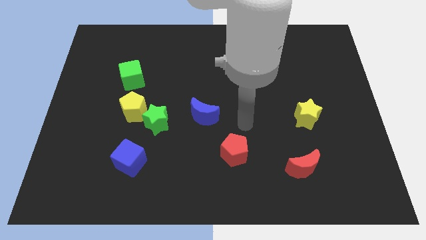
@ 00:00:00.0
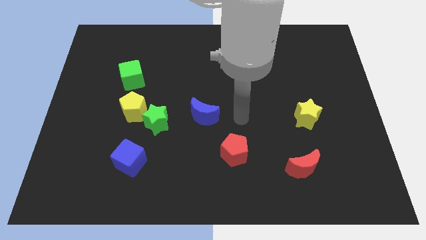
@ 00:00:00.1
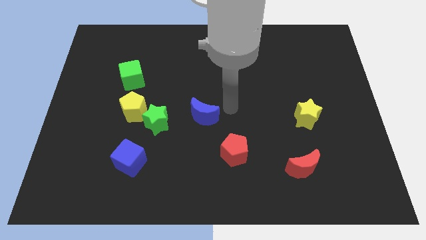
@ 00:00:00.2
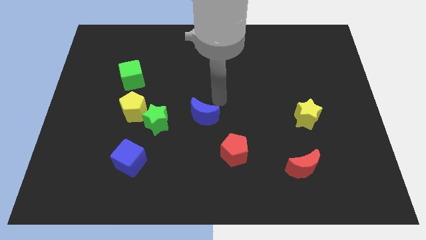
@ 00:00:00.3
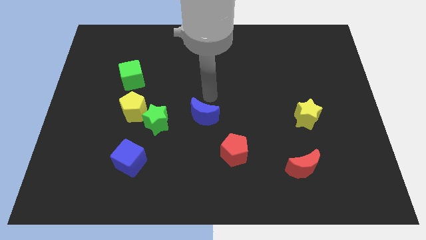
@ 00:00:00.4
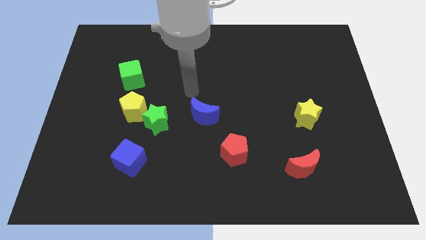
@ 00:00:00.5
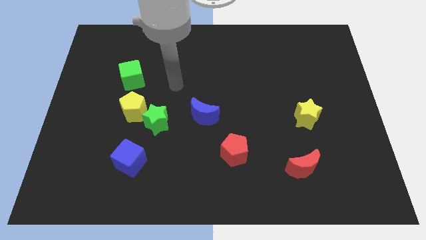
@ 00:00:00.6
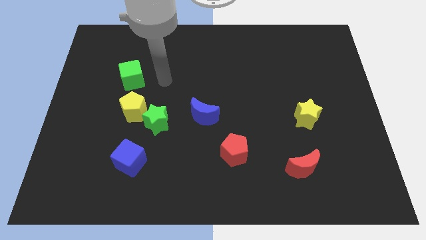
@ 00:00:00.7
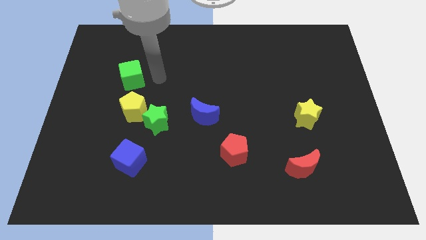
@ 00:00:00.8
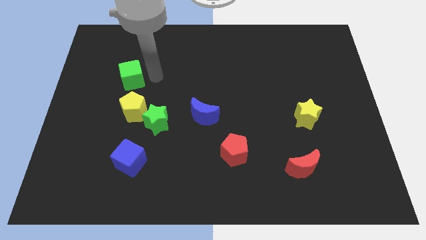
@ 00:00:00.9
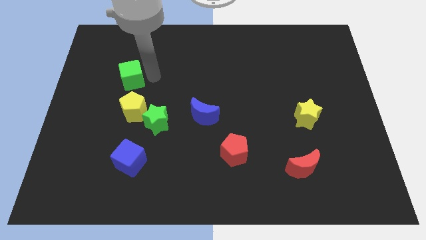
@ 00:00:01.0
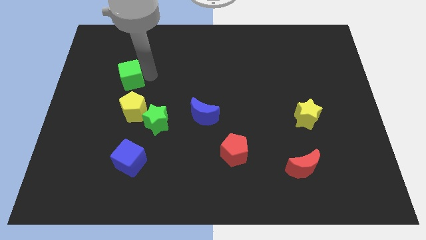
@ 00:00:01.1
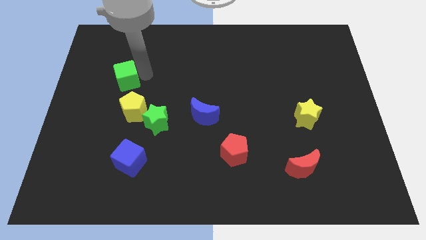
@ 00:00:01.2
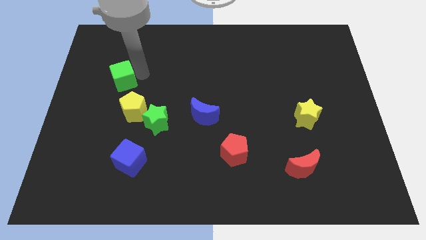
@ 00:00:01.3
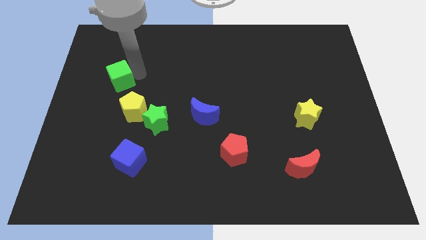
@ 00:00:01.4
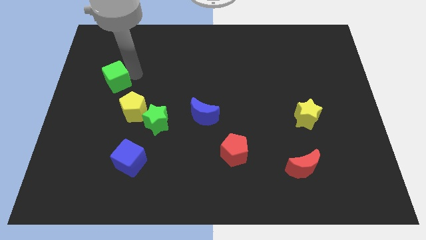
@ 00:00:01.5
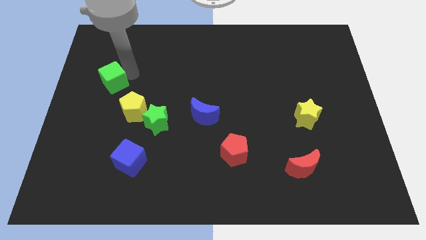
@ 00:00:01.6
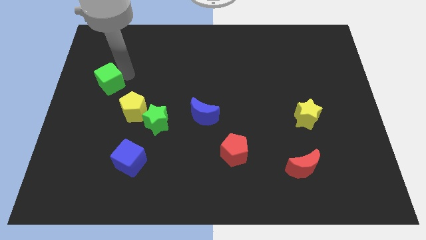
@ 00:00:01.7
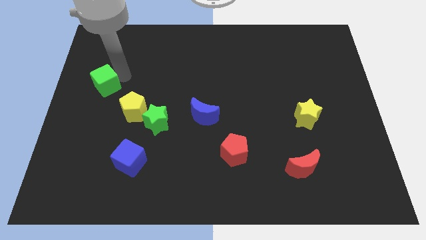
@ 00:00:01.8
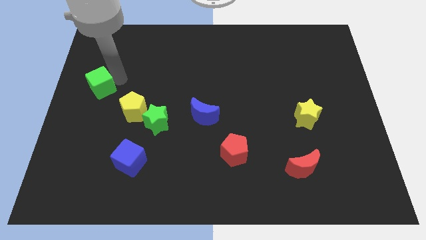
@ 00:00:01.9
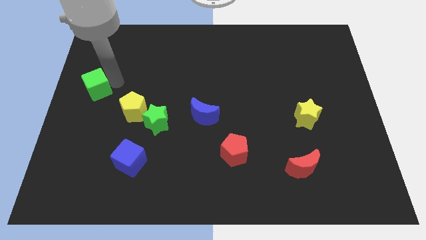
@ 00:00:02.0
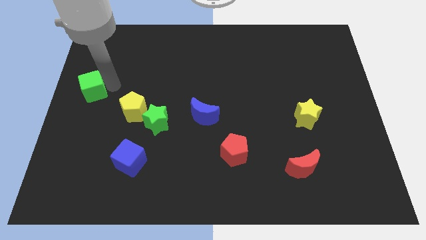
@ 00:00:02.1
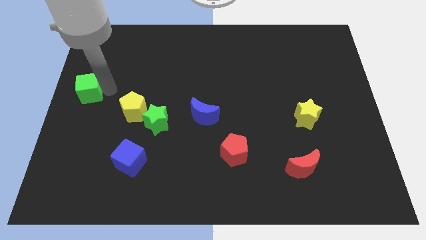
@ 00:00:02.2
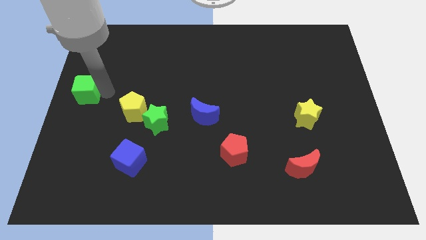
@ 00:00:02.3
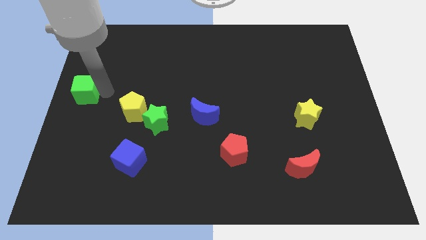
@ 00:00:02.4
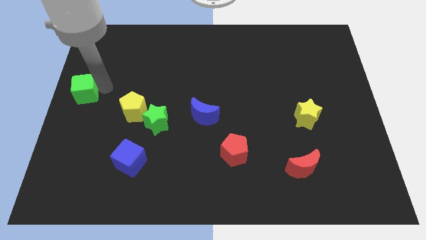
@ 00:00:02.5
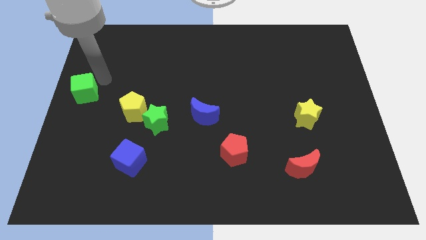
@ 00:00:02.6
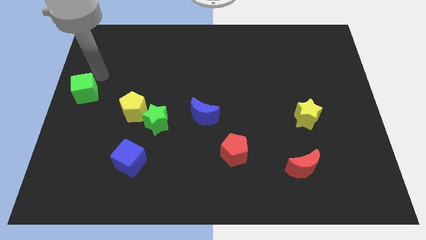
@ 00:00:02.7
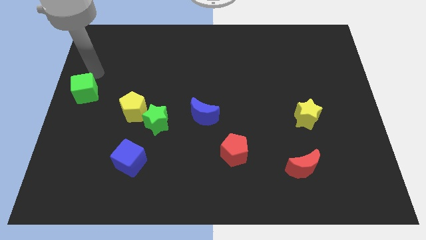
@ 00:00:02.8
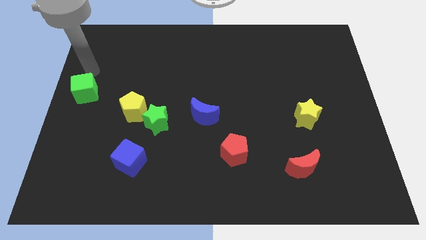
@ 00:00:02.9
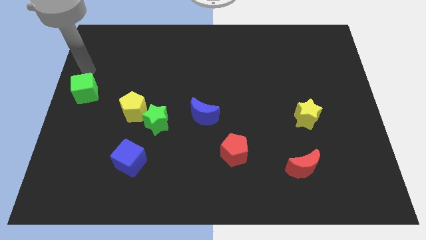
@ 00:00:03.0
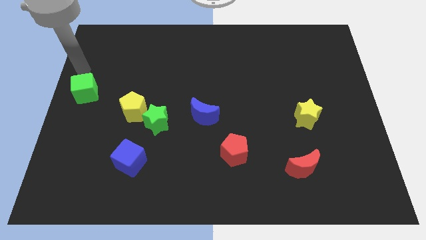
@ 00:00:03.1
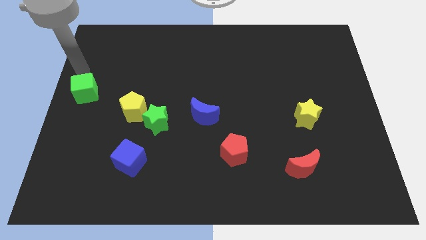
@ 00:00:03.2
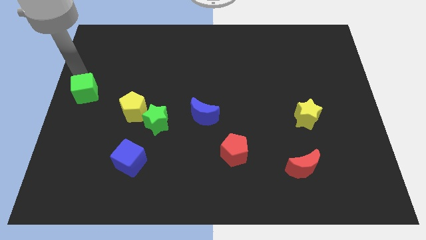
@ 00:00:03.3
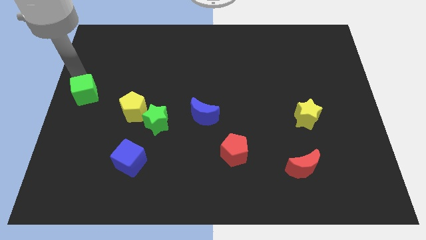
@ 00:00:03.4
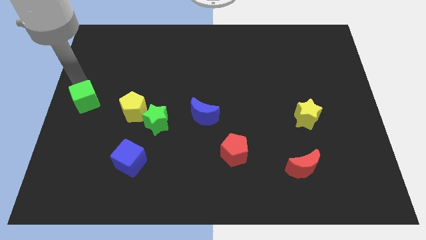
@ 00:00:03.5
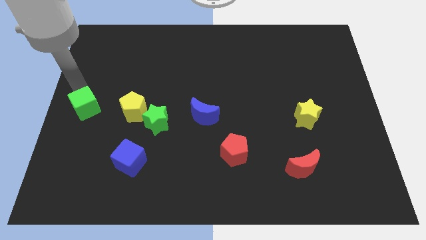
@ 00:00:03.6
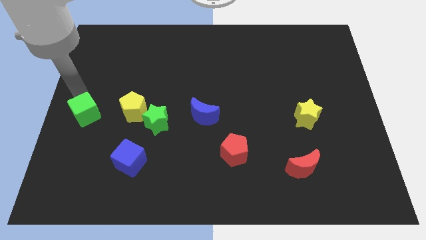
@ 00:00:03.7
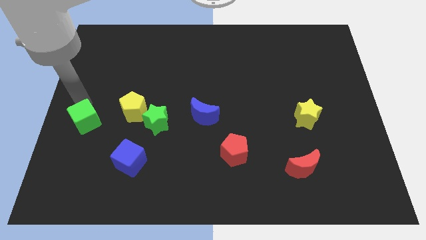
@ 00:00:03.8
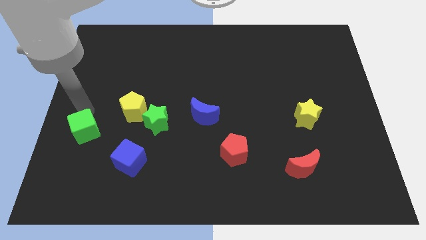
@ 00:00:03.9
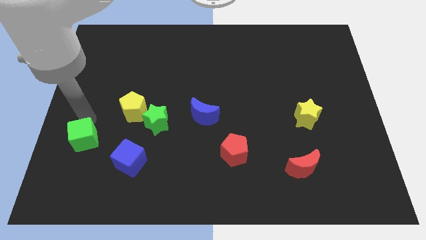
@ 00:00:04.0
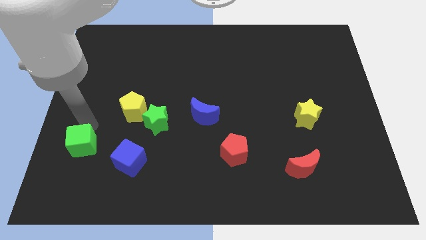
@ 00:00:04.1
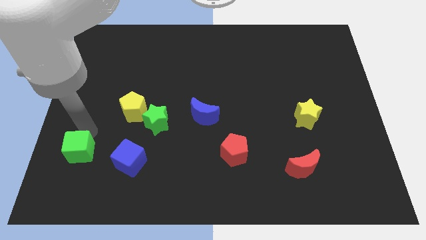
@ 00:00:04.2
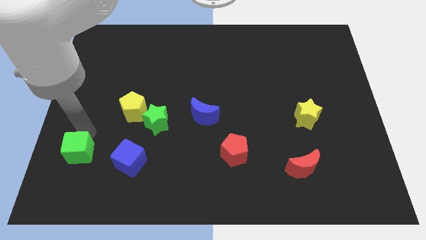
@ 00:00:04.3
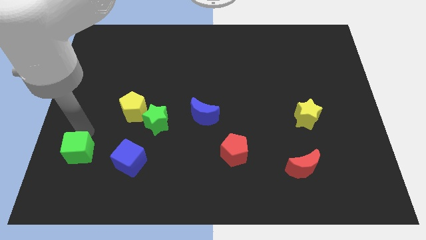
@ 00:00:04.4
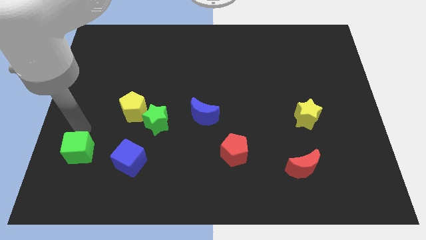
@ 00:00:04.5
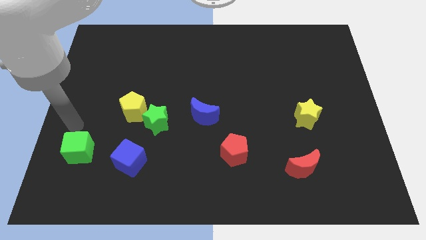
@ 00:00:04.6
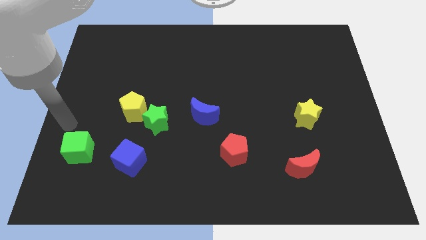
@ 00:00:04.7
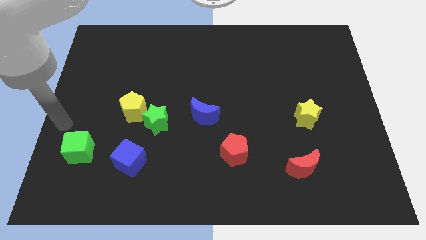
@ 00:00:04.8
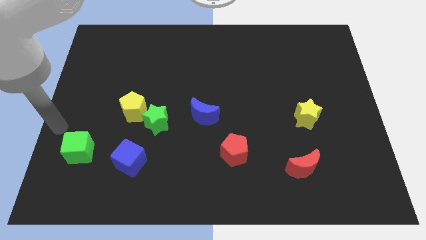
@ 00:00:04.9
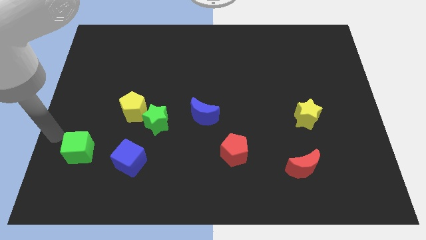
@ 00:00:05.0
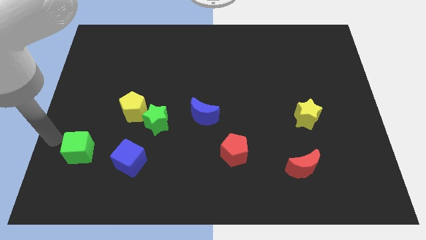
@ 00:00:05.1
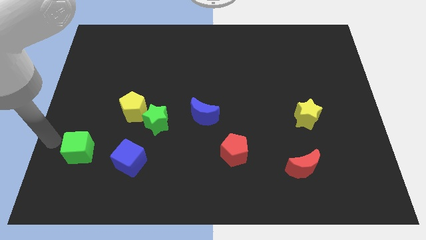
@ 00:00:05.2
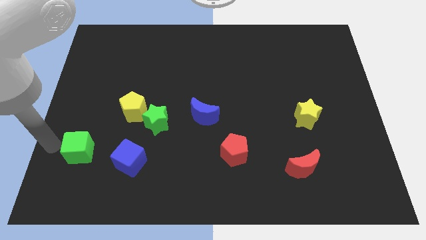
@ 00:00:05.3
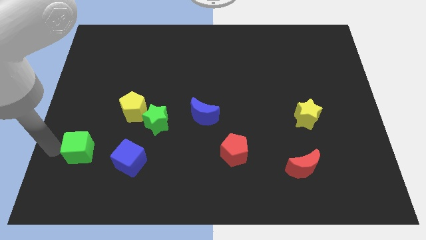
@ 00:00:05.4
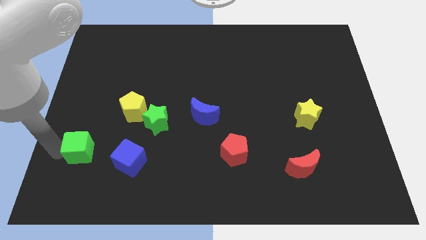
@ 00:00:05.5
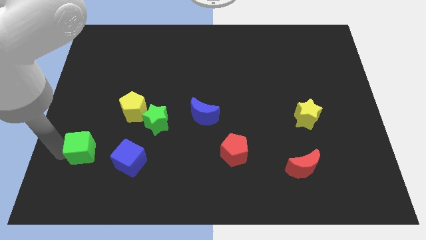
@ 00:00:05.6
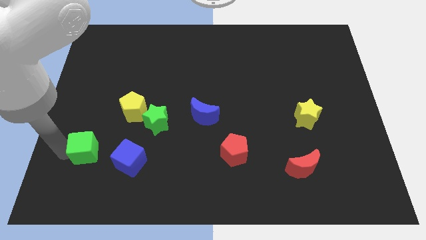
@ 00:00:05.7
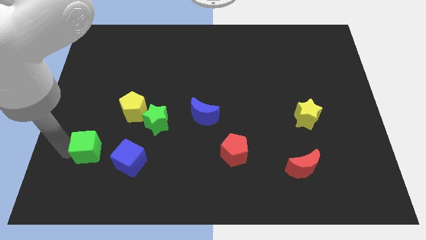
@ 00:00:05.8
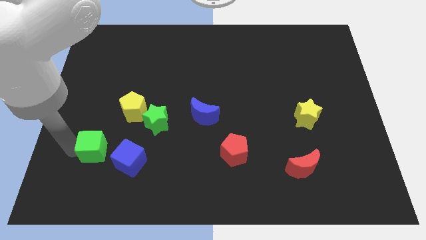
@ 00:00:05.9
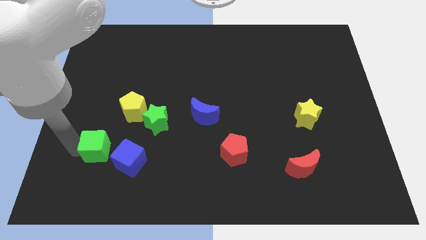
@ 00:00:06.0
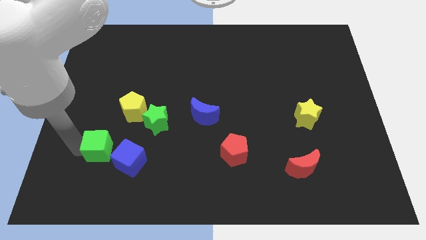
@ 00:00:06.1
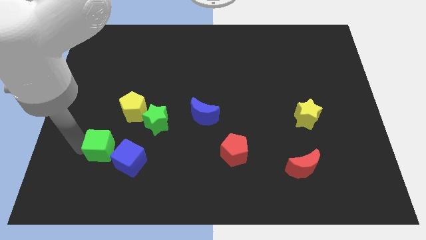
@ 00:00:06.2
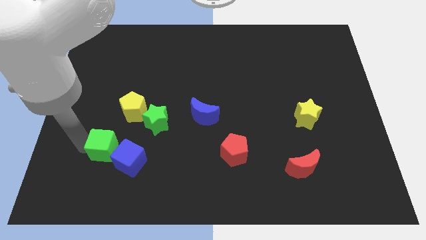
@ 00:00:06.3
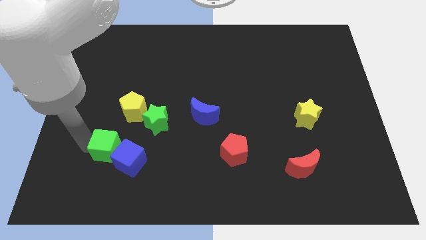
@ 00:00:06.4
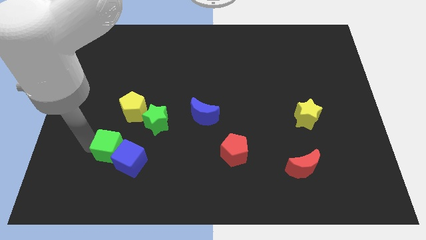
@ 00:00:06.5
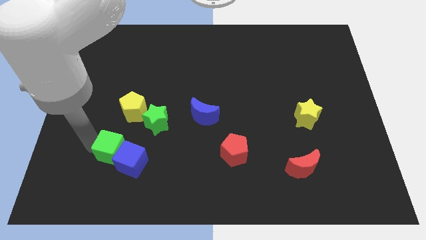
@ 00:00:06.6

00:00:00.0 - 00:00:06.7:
move the green cube next to the blue cube

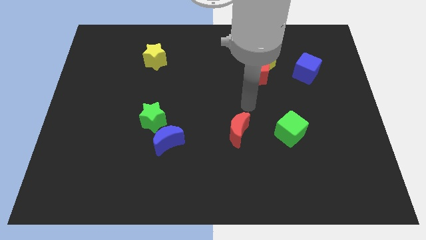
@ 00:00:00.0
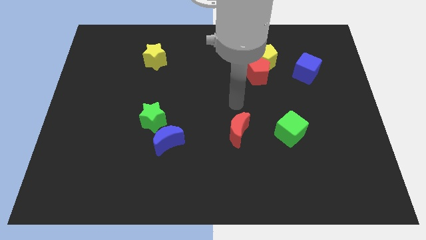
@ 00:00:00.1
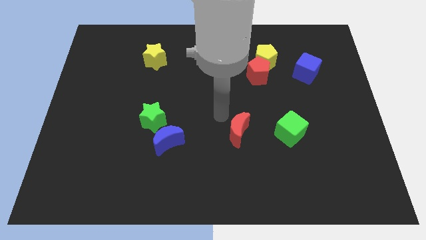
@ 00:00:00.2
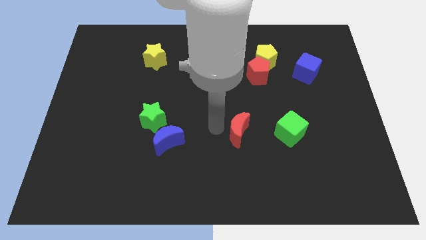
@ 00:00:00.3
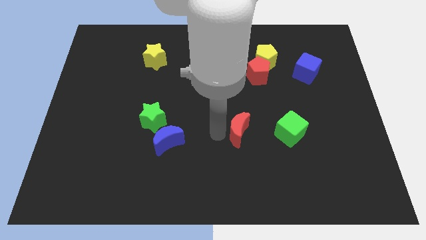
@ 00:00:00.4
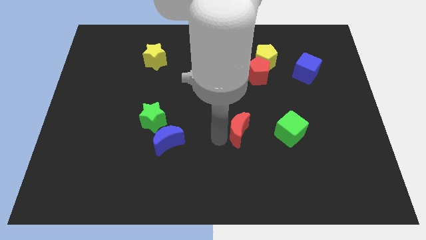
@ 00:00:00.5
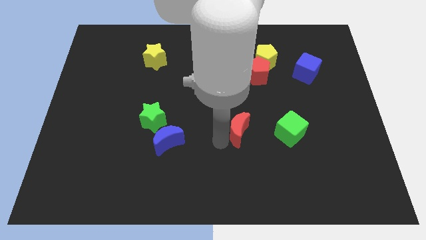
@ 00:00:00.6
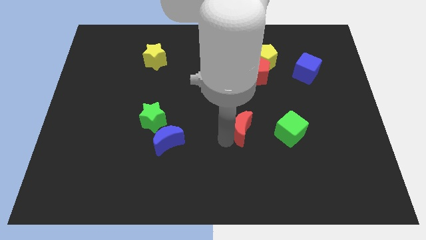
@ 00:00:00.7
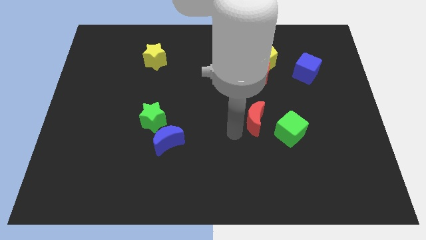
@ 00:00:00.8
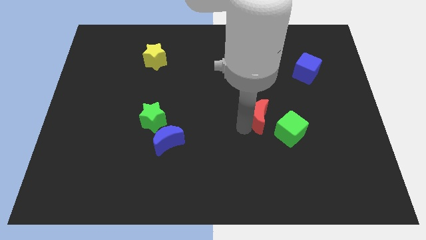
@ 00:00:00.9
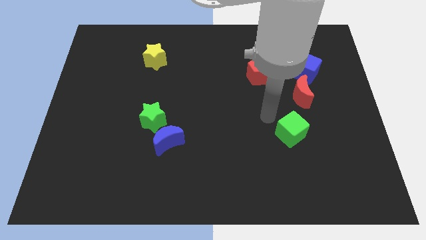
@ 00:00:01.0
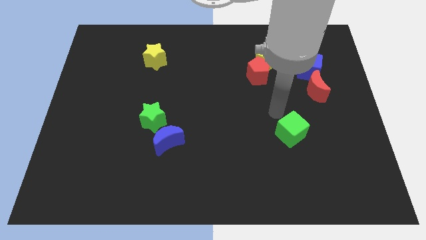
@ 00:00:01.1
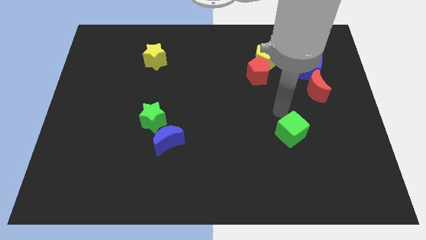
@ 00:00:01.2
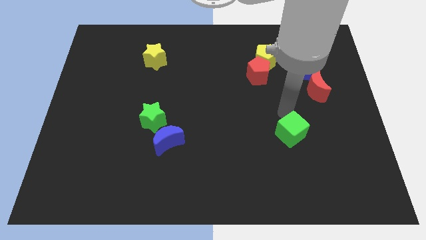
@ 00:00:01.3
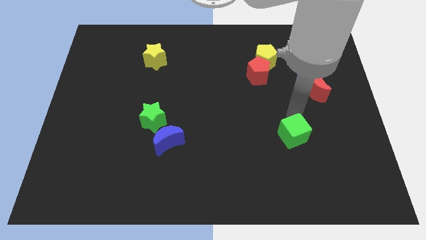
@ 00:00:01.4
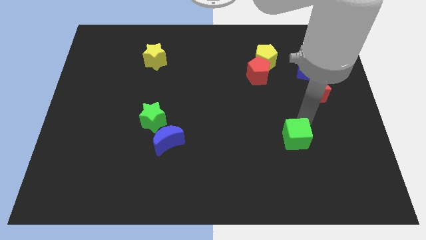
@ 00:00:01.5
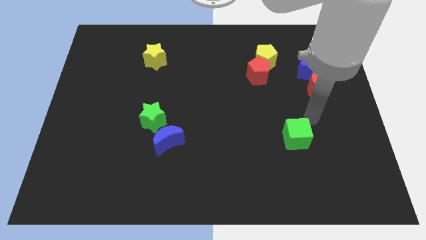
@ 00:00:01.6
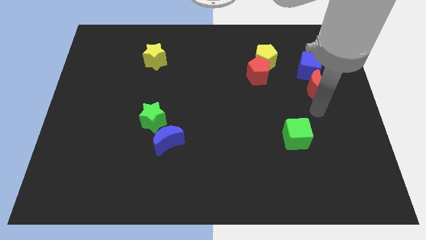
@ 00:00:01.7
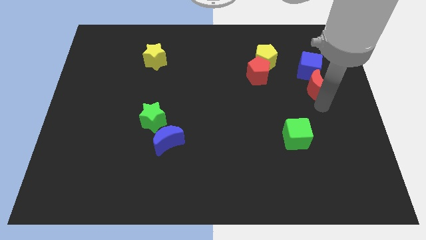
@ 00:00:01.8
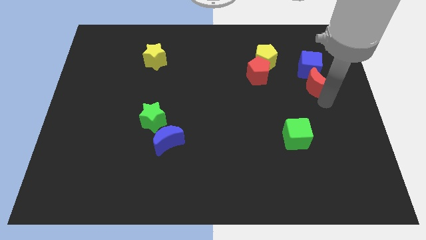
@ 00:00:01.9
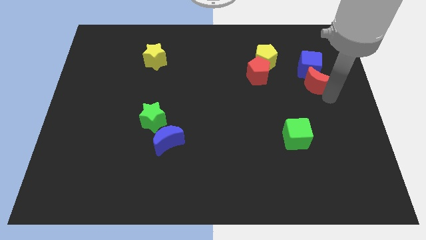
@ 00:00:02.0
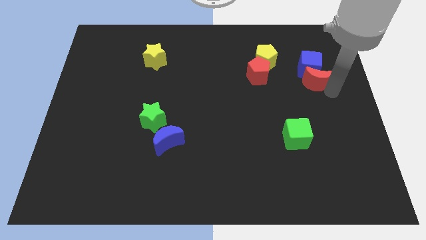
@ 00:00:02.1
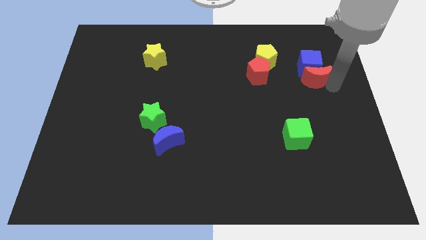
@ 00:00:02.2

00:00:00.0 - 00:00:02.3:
slide the red moon next to the blue cube
